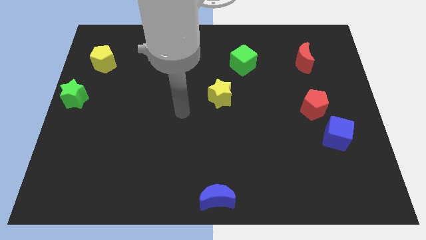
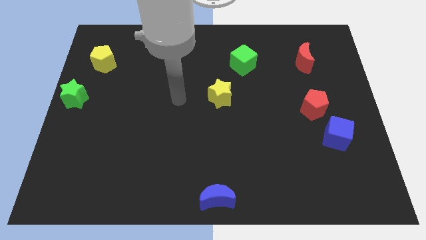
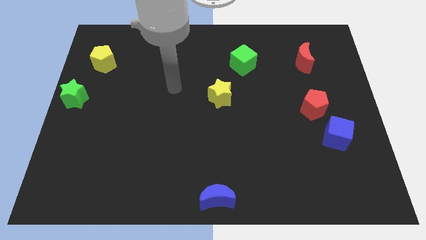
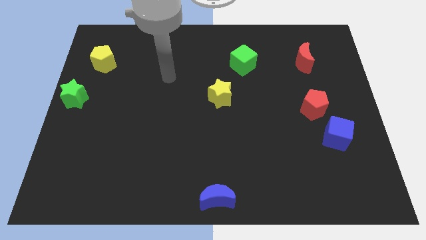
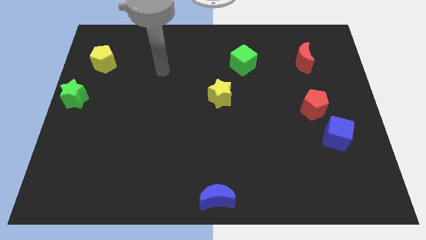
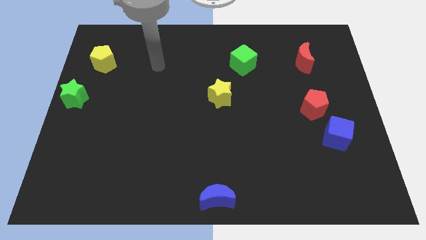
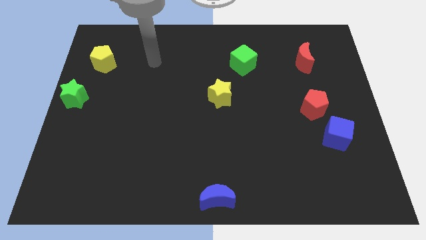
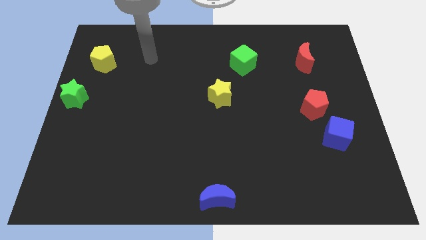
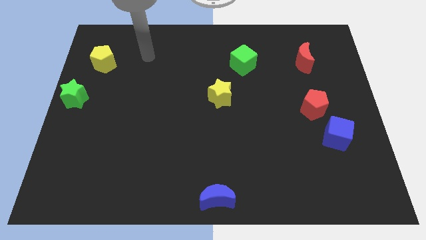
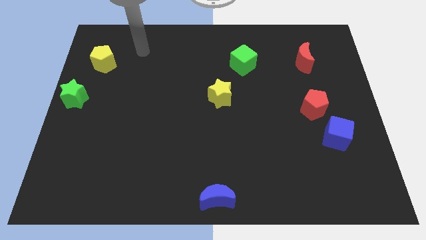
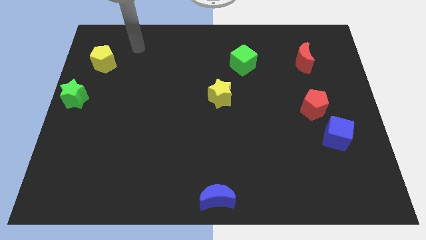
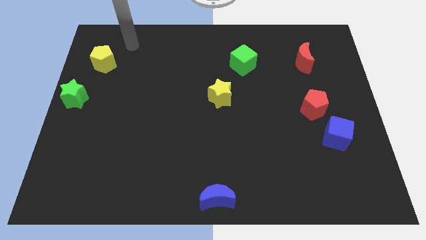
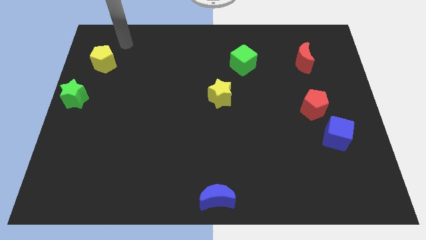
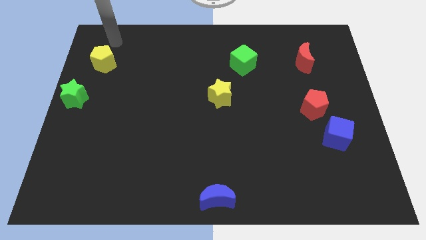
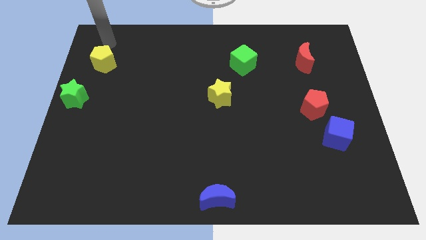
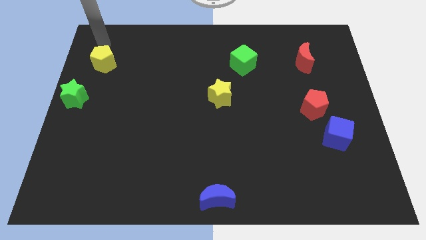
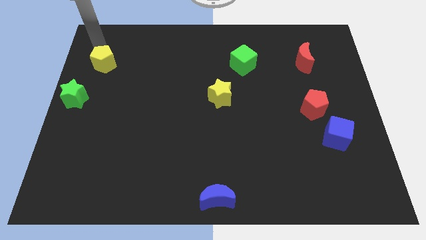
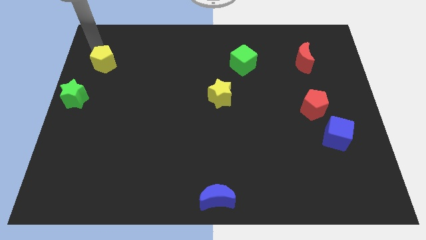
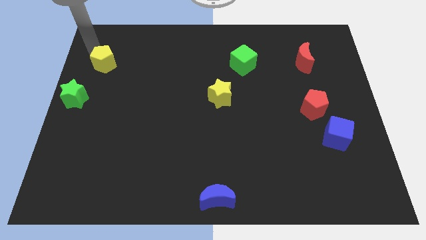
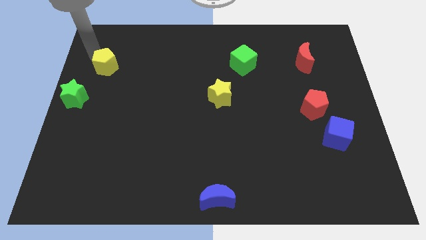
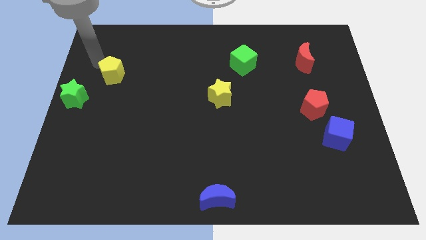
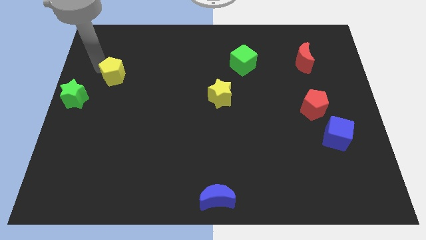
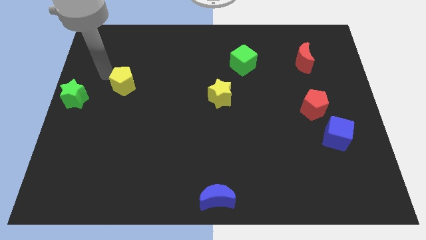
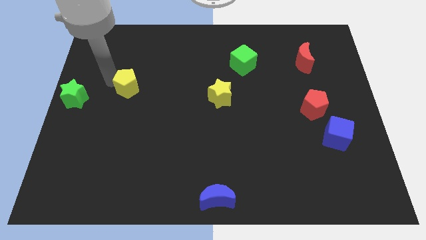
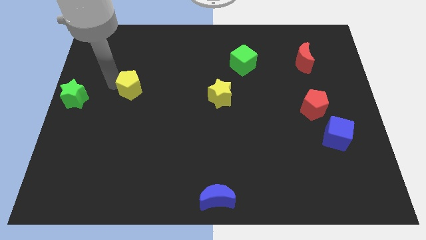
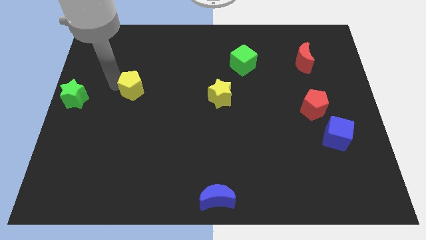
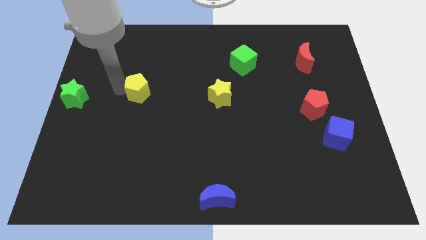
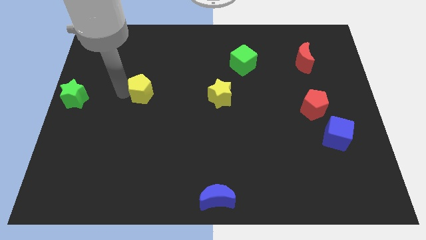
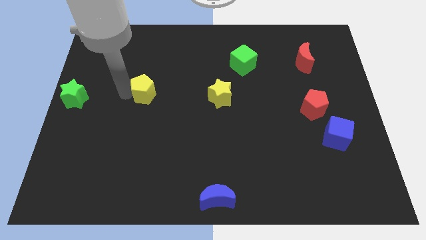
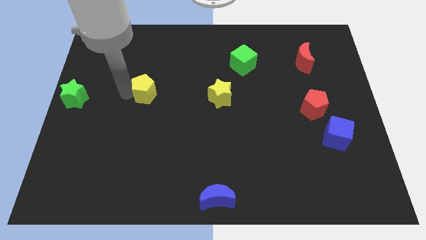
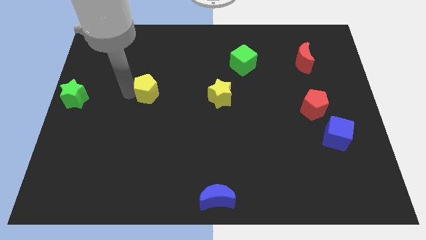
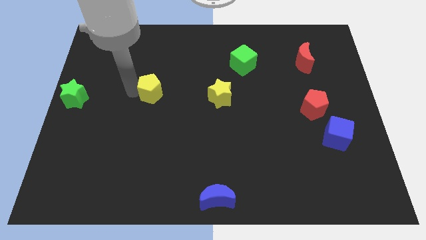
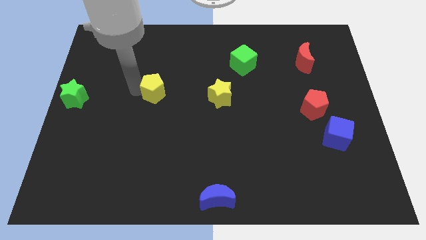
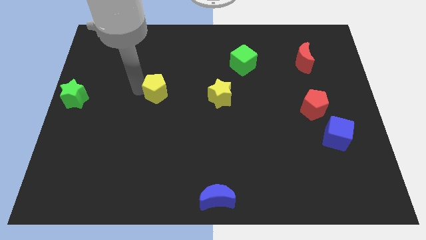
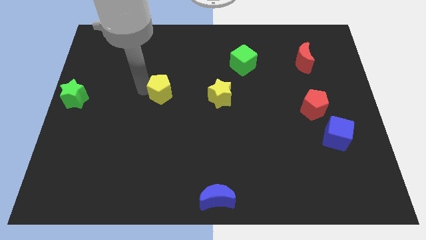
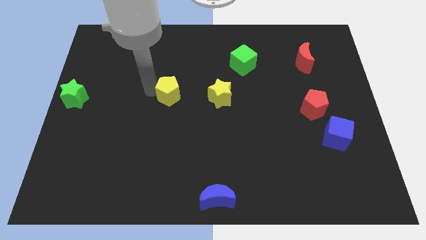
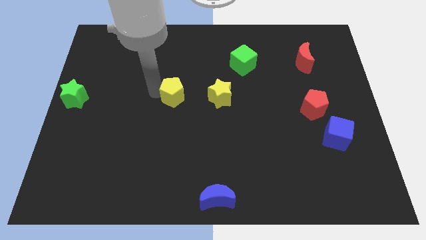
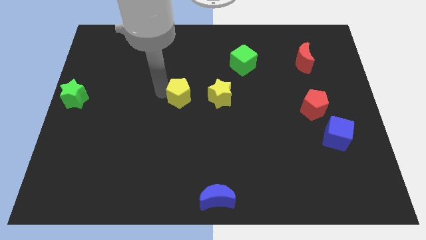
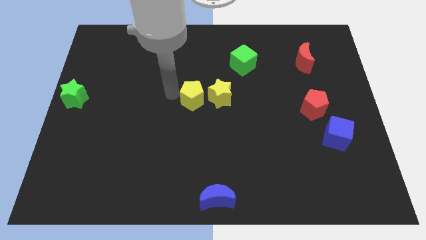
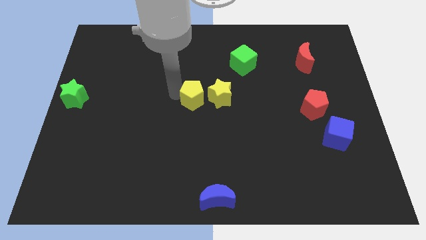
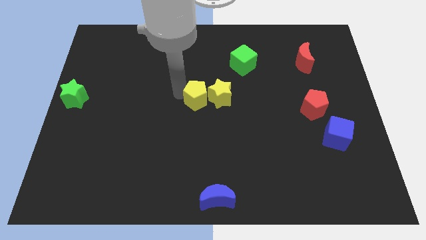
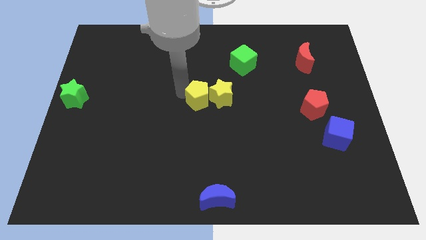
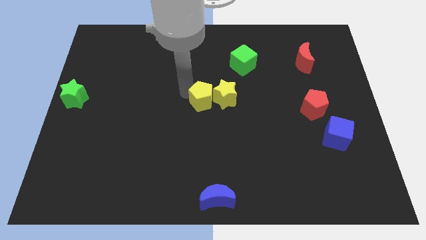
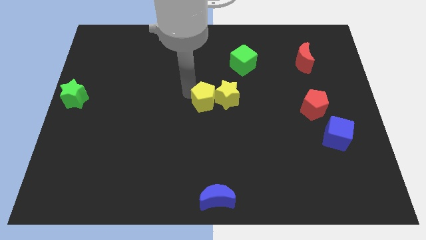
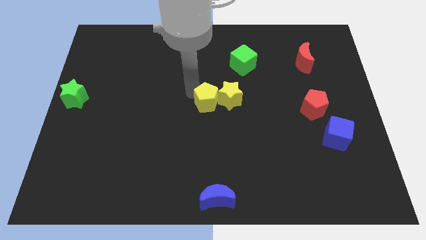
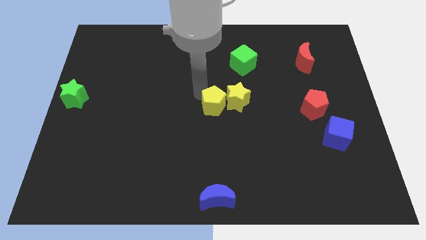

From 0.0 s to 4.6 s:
push the yellow pentagon into the yellow star

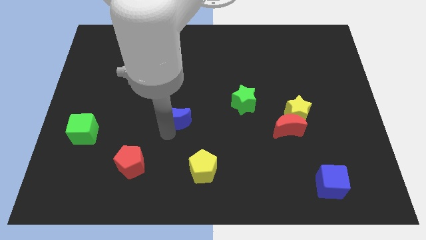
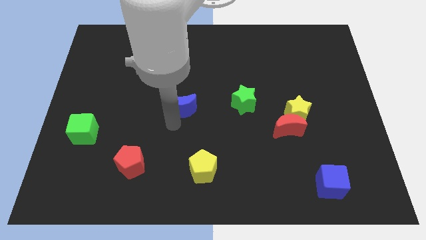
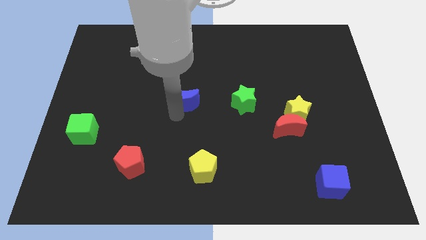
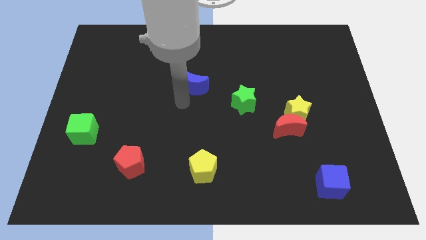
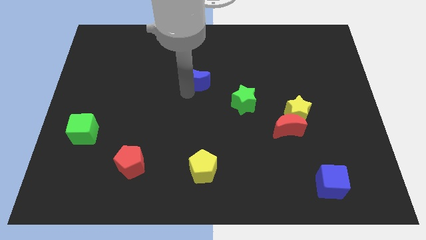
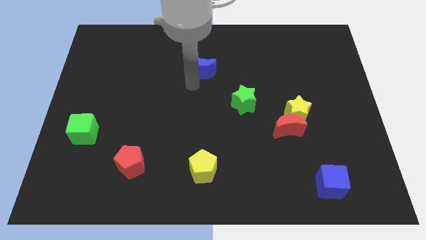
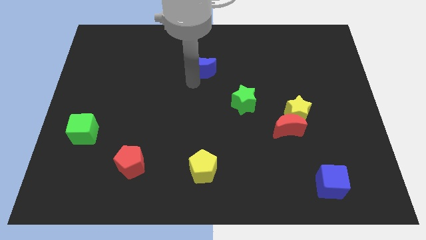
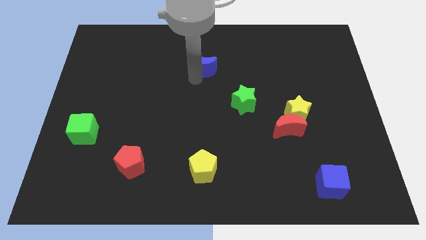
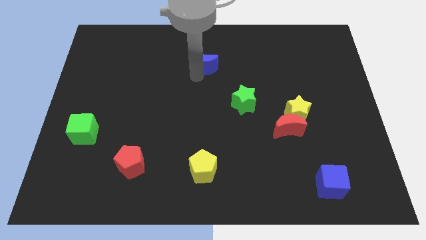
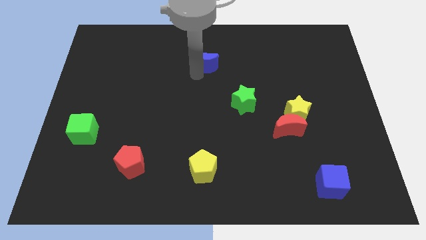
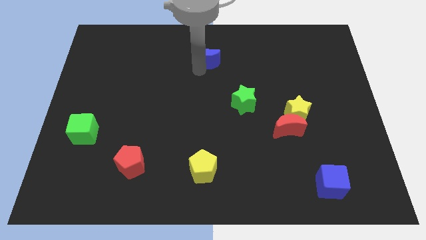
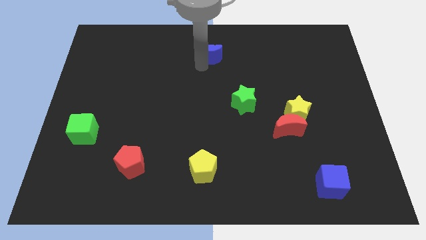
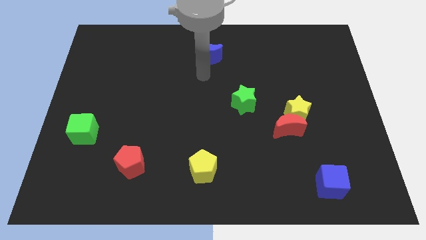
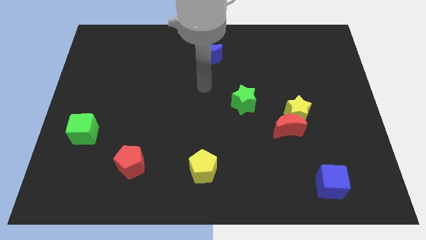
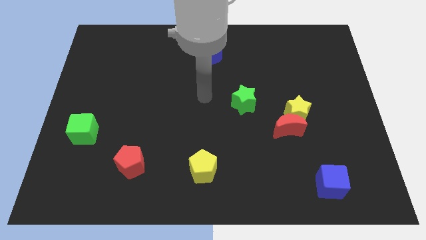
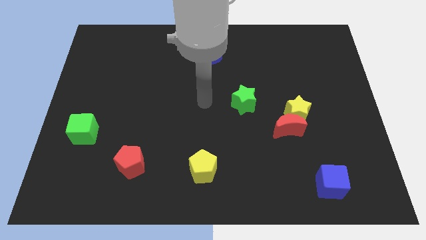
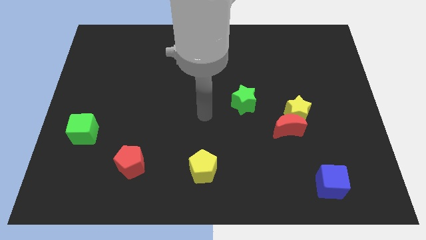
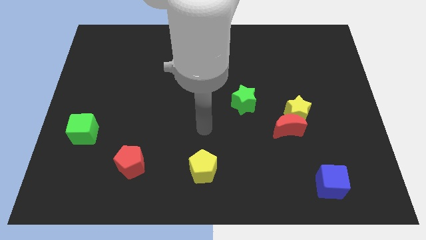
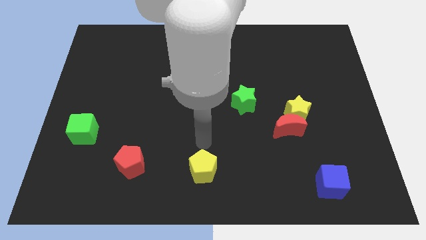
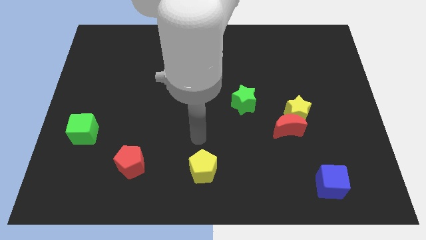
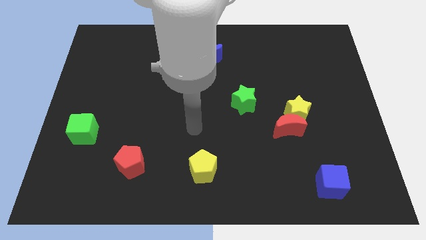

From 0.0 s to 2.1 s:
move your arm towards the top side of the yellow pentagon

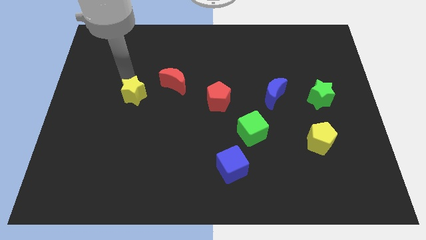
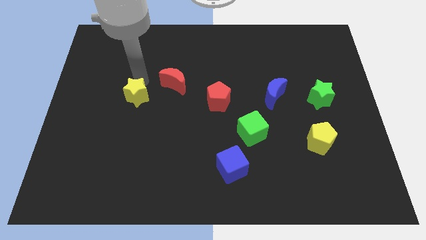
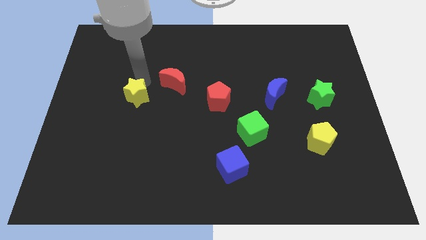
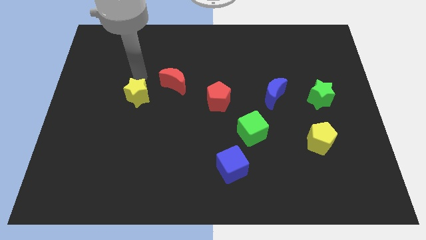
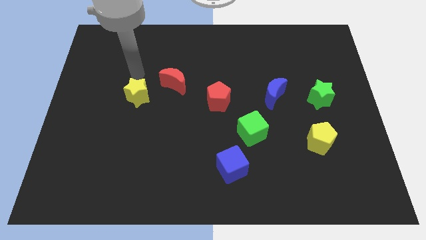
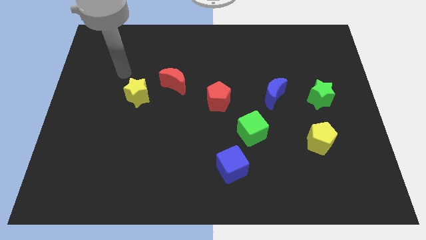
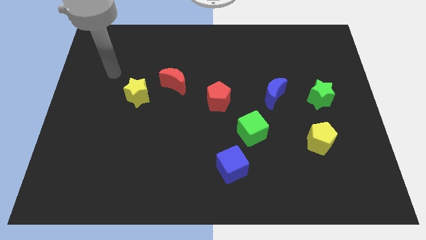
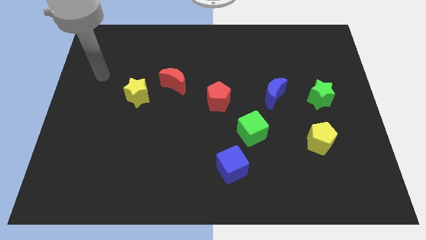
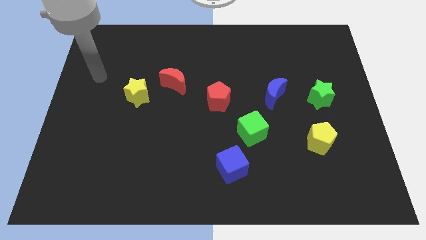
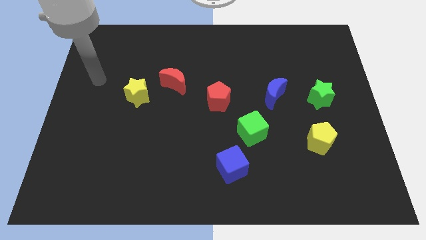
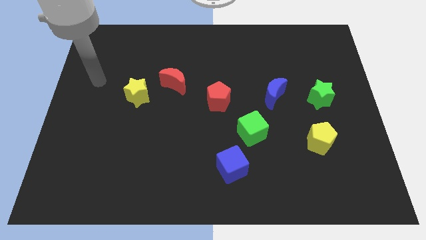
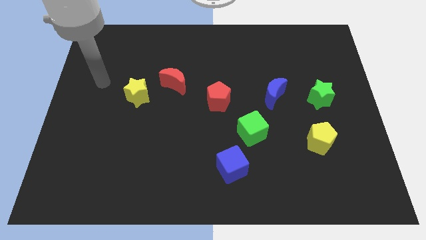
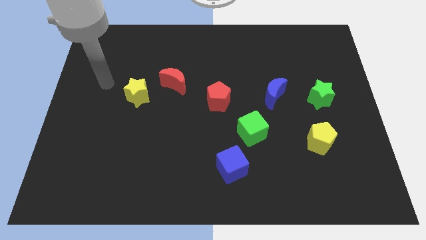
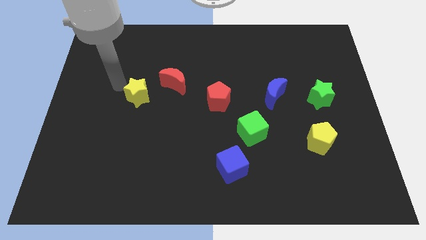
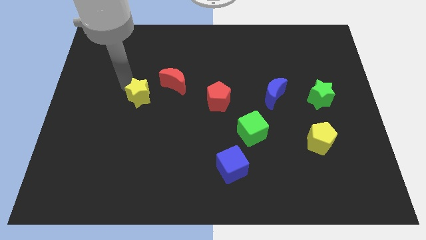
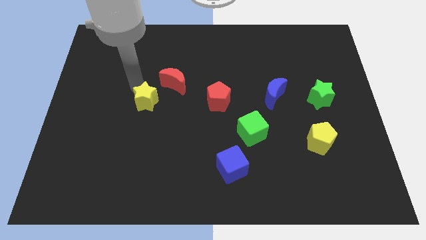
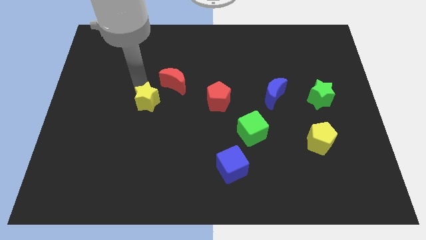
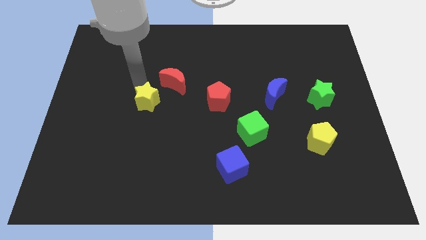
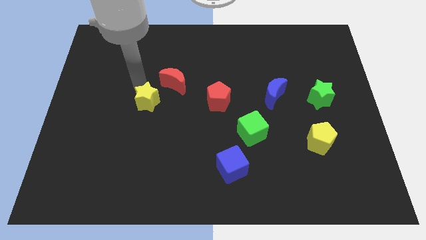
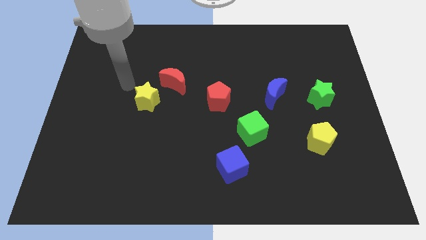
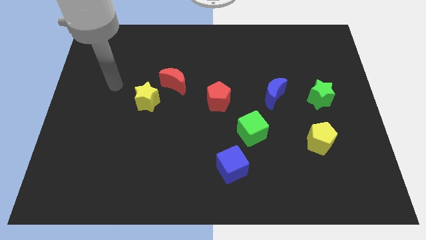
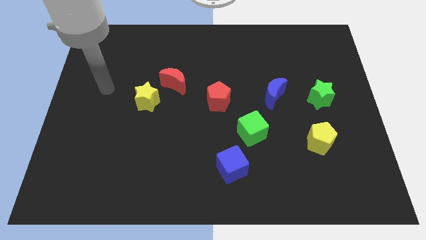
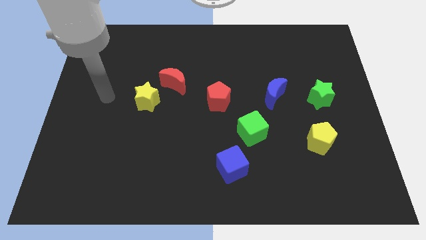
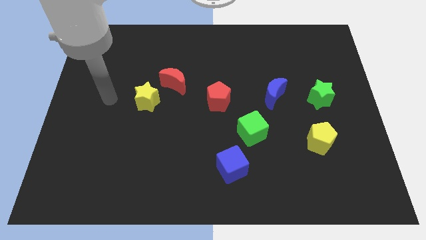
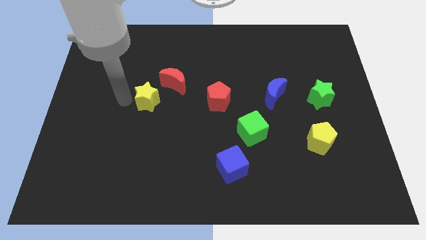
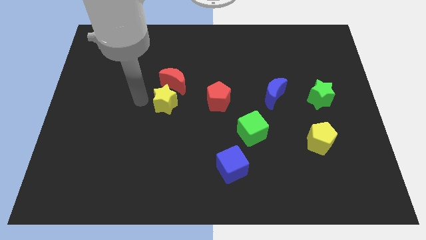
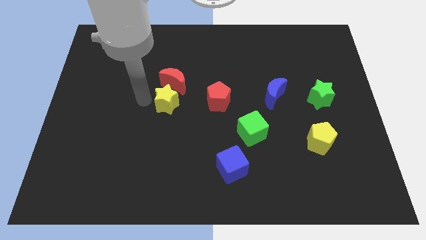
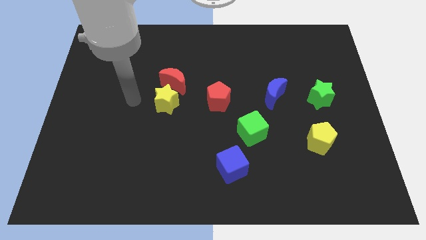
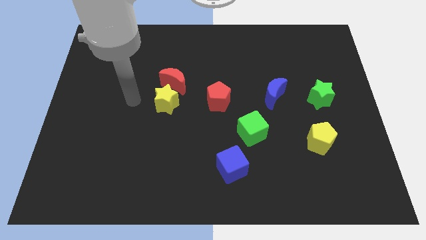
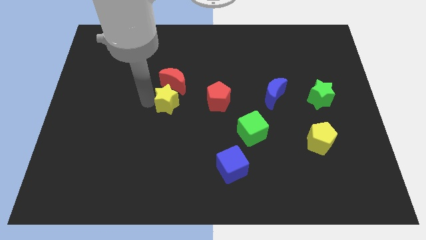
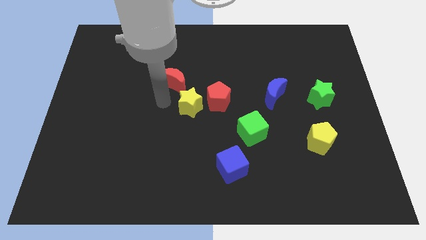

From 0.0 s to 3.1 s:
place yellow star to the left of red pentagon
